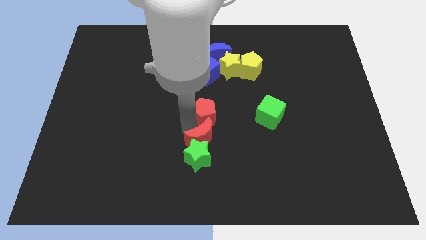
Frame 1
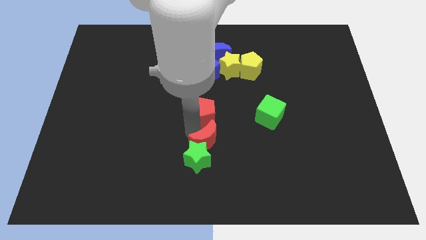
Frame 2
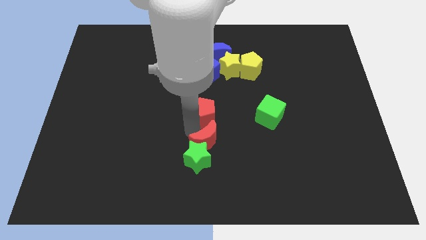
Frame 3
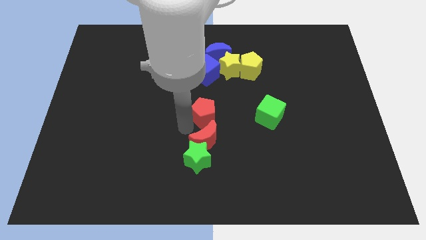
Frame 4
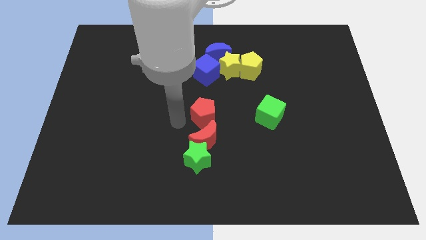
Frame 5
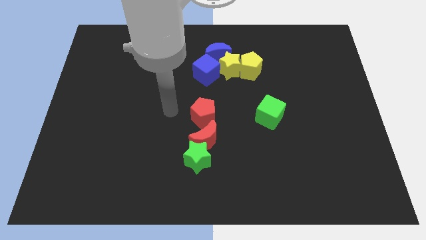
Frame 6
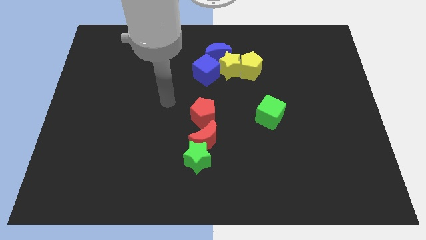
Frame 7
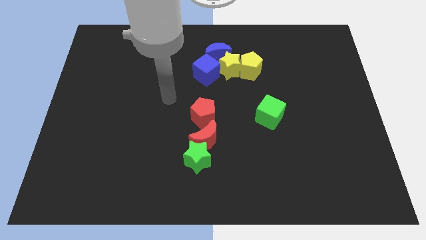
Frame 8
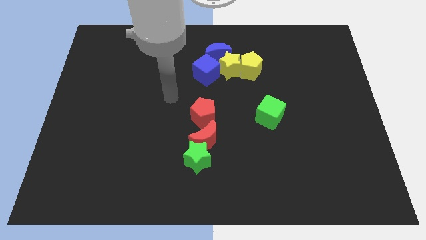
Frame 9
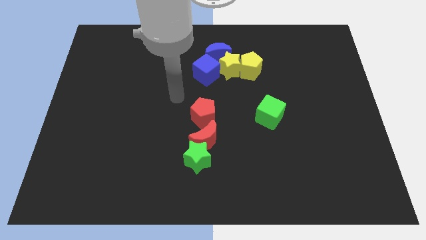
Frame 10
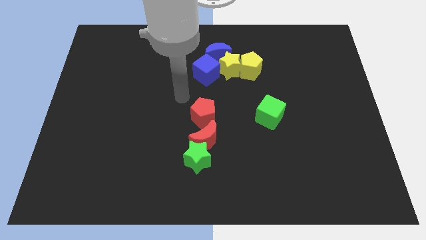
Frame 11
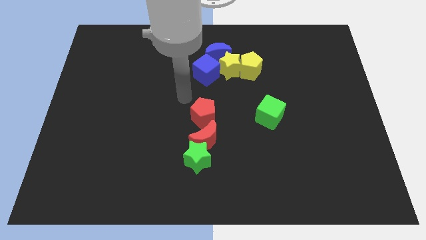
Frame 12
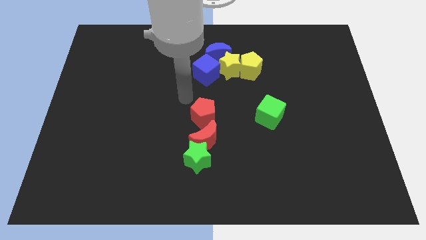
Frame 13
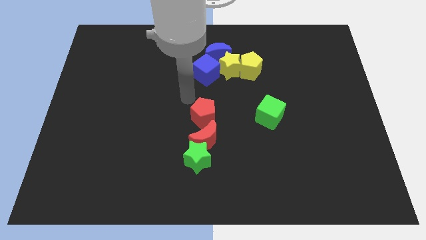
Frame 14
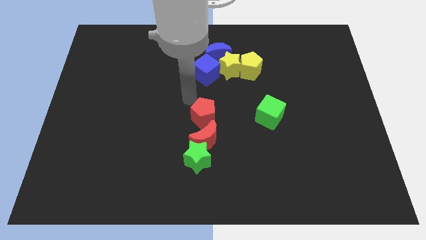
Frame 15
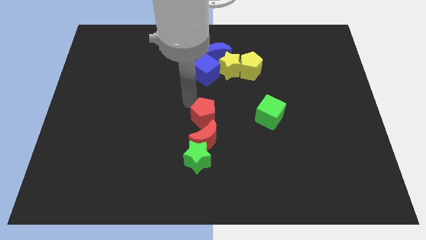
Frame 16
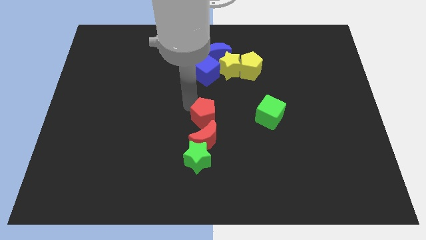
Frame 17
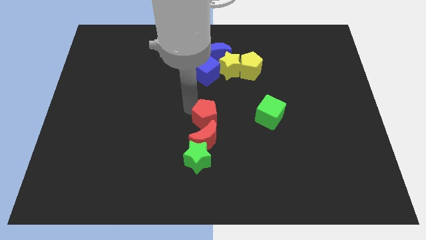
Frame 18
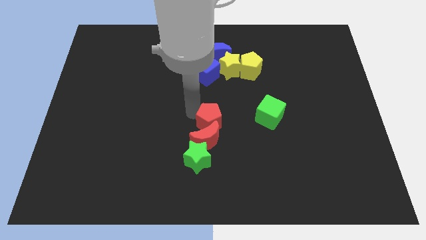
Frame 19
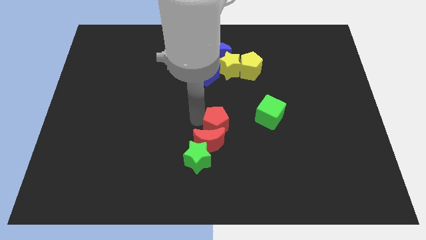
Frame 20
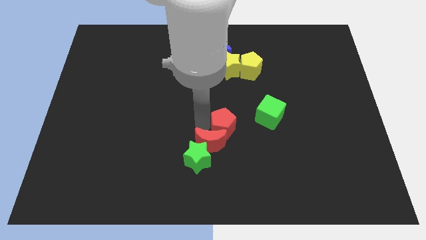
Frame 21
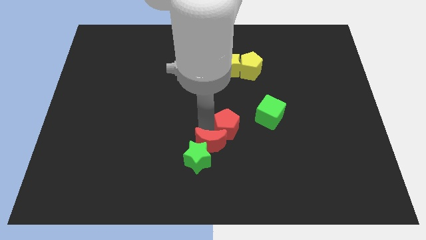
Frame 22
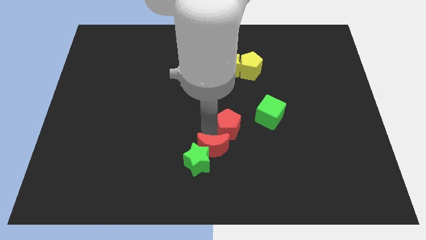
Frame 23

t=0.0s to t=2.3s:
push the red moon into the green star on the top

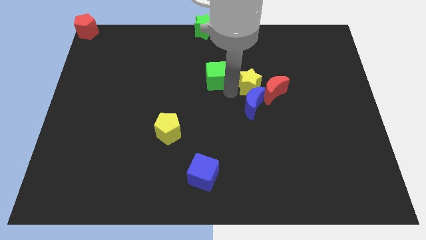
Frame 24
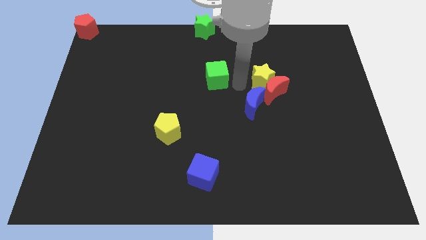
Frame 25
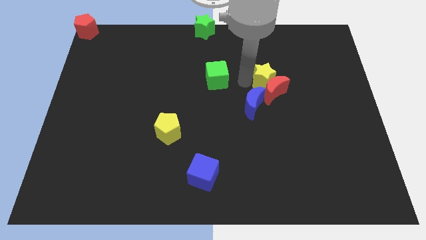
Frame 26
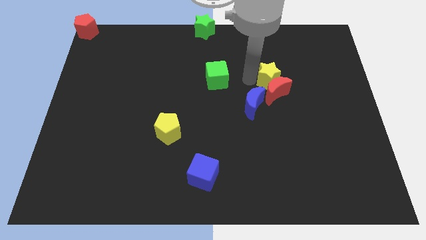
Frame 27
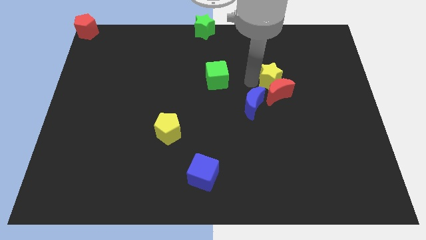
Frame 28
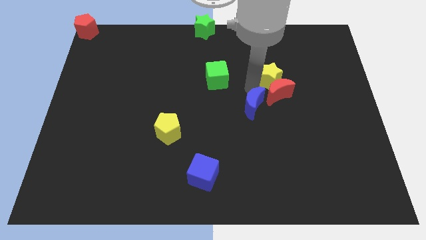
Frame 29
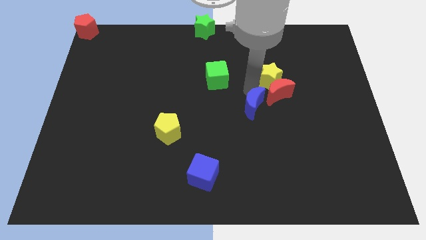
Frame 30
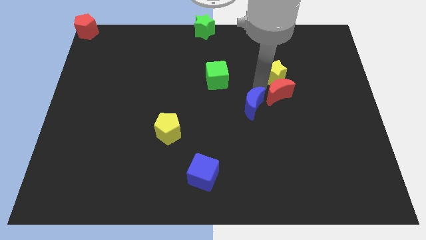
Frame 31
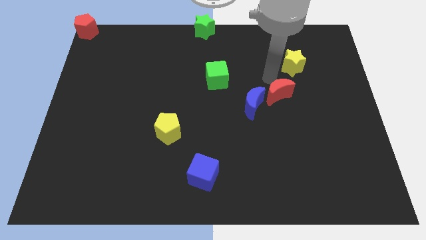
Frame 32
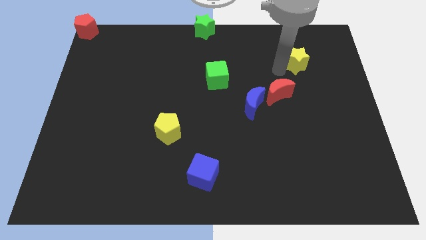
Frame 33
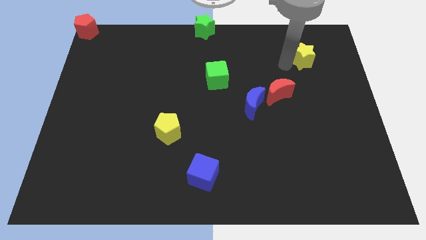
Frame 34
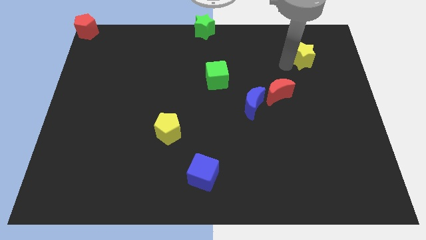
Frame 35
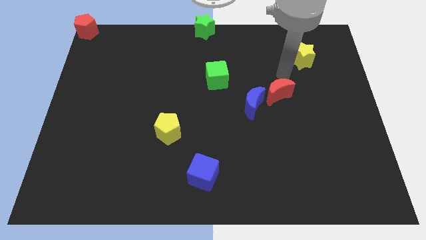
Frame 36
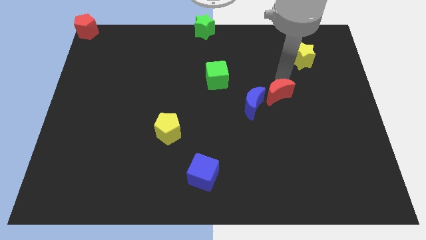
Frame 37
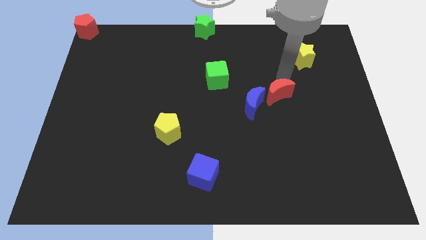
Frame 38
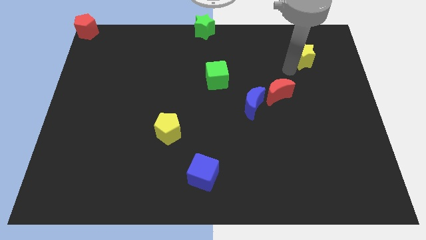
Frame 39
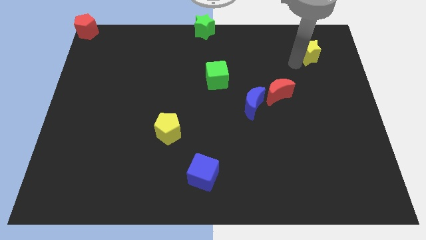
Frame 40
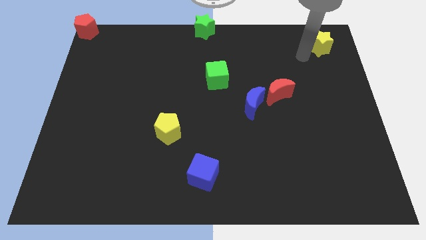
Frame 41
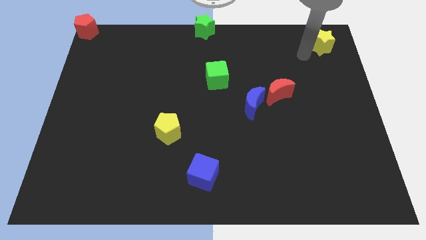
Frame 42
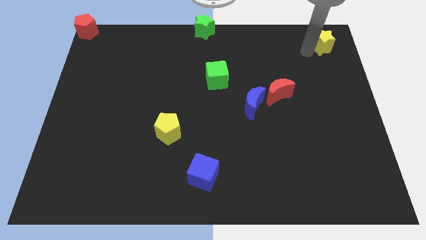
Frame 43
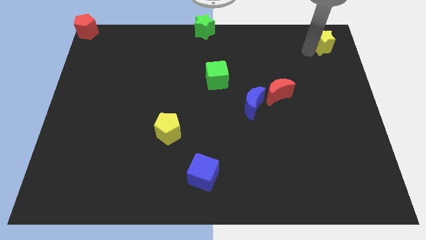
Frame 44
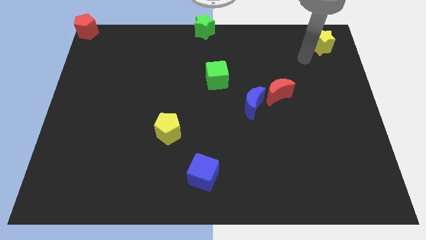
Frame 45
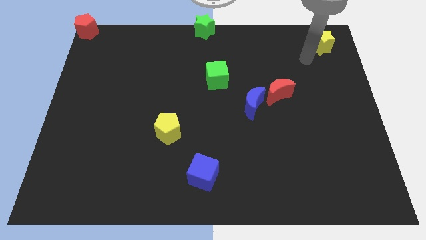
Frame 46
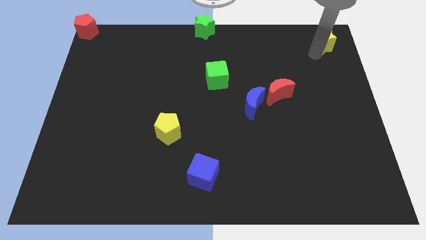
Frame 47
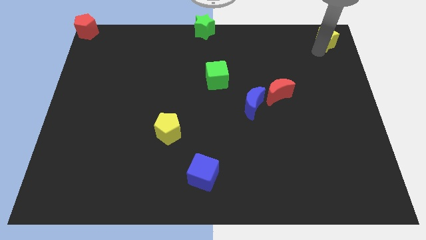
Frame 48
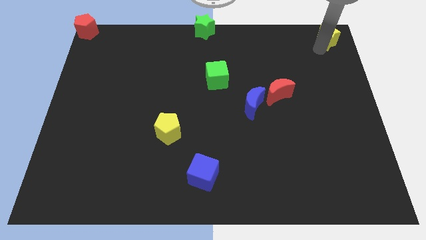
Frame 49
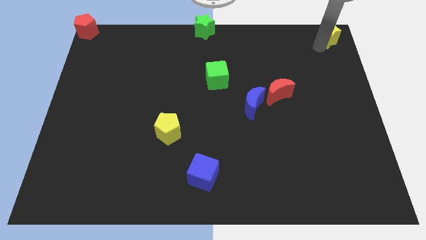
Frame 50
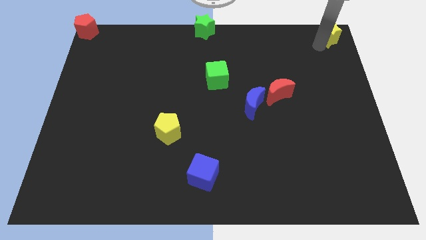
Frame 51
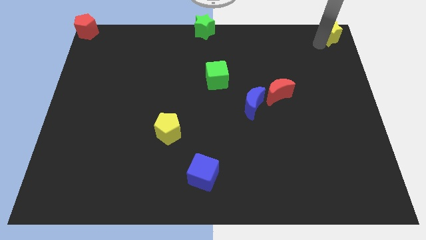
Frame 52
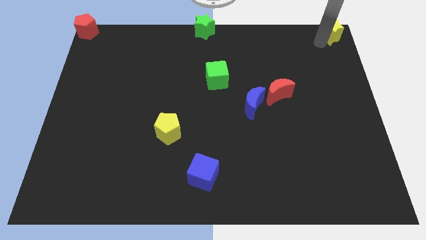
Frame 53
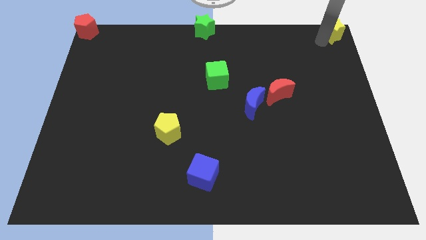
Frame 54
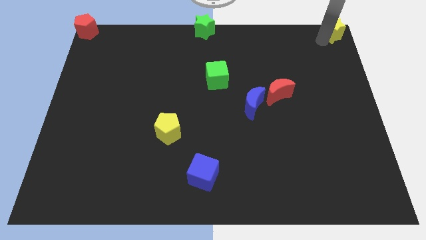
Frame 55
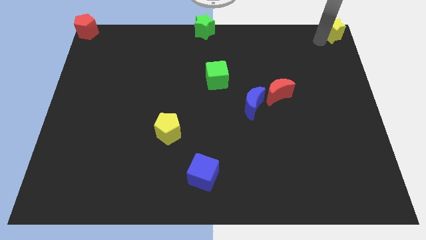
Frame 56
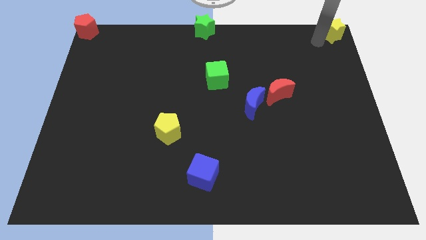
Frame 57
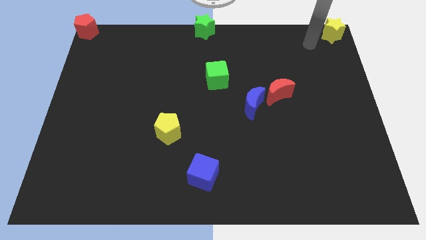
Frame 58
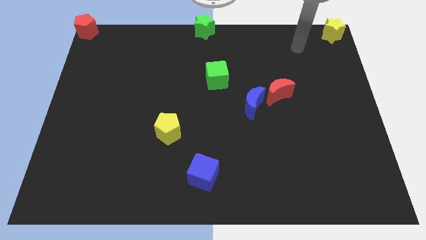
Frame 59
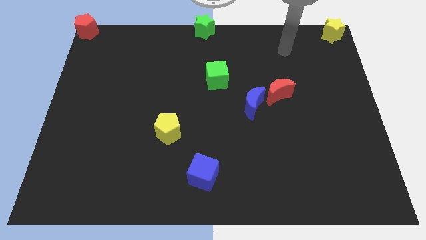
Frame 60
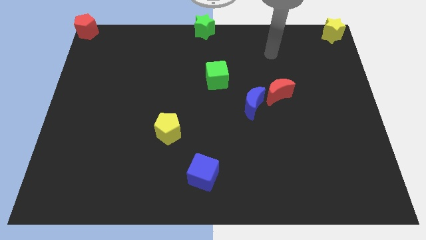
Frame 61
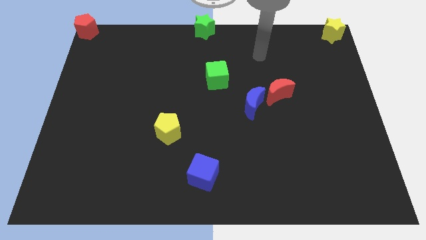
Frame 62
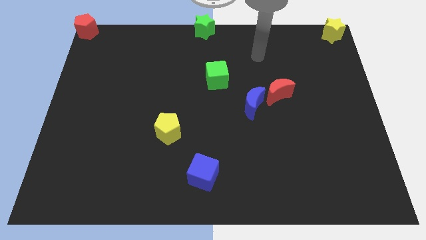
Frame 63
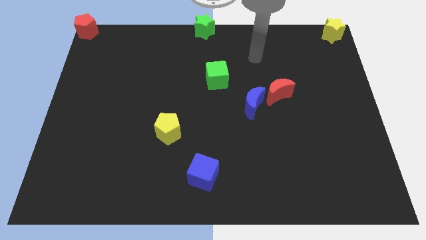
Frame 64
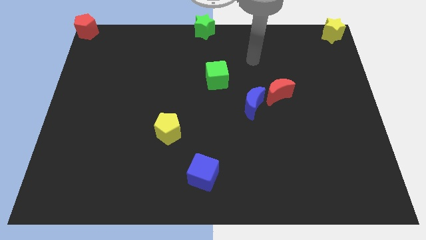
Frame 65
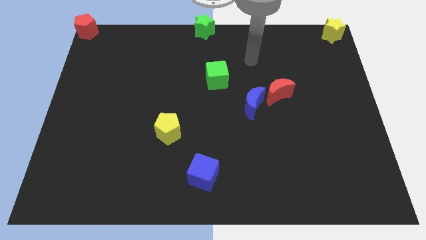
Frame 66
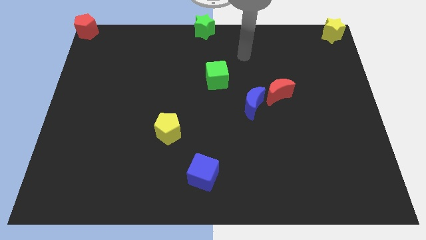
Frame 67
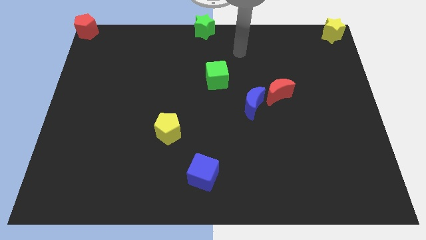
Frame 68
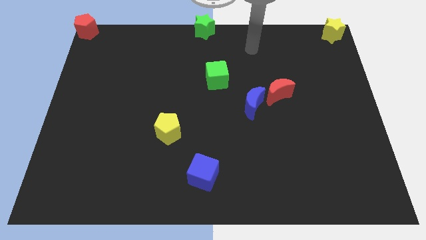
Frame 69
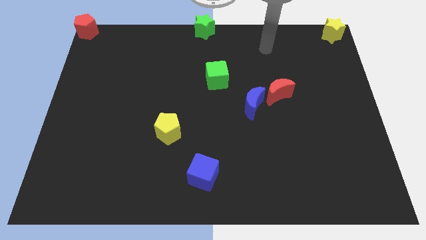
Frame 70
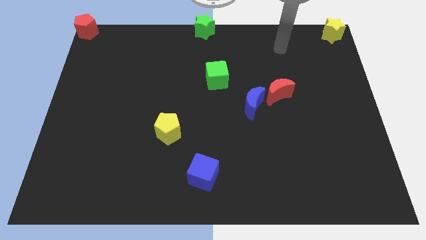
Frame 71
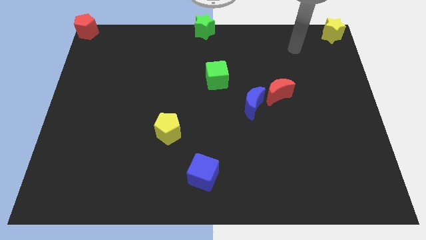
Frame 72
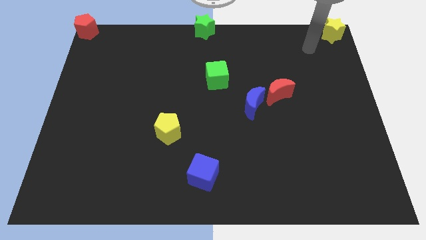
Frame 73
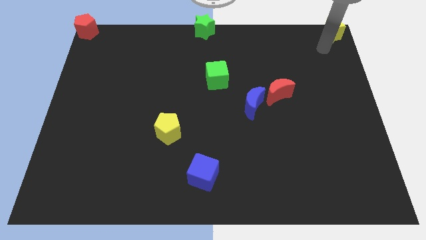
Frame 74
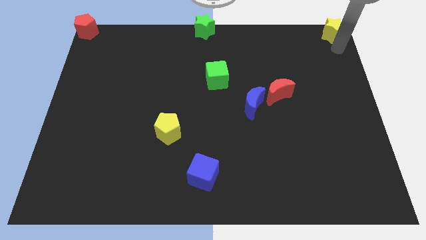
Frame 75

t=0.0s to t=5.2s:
place yellow star towards top right corner

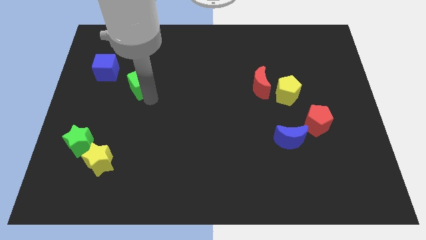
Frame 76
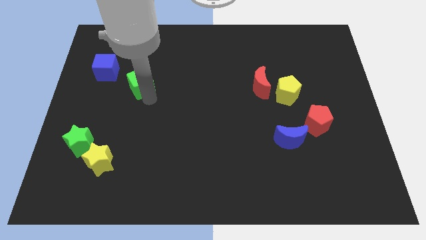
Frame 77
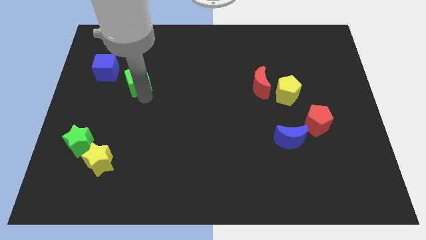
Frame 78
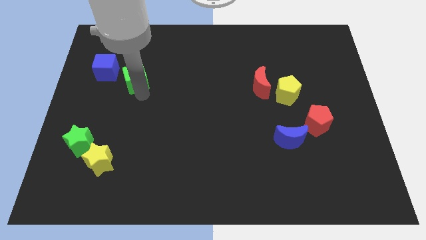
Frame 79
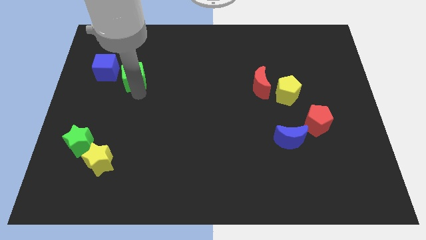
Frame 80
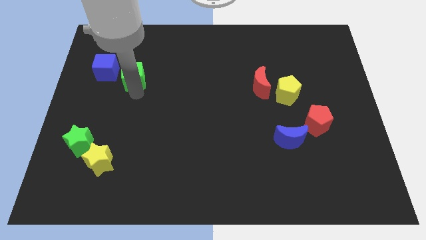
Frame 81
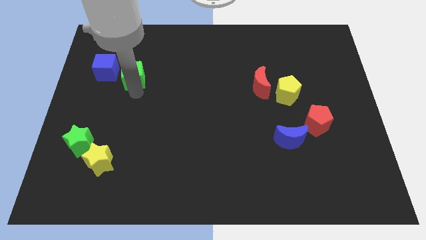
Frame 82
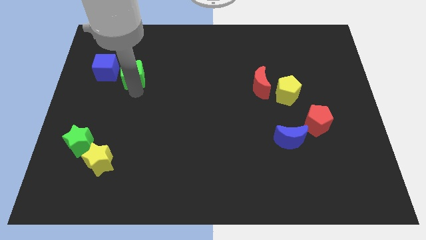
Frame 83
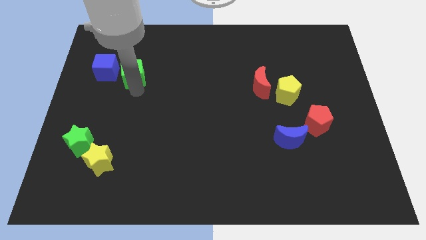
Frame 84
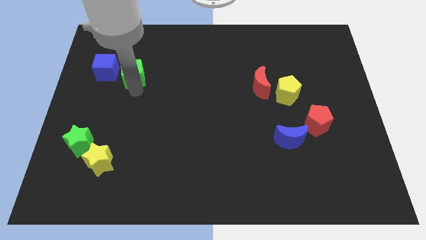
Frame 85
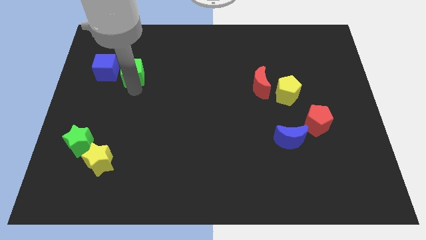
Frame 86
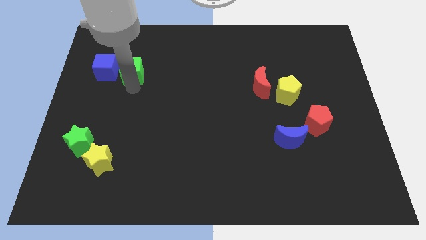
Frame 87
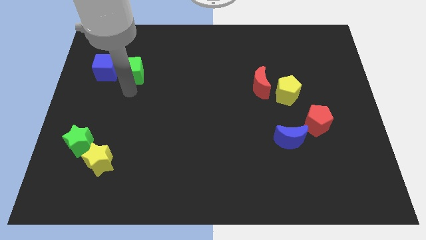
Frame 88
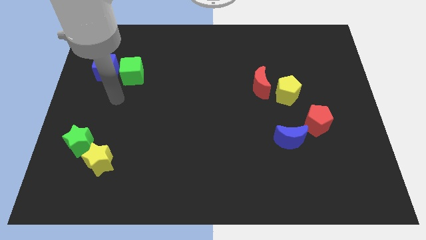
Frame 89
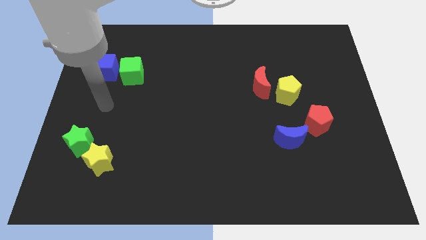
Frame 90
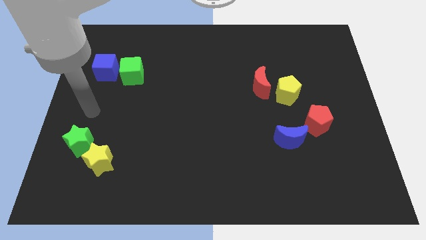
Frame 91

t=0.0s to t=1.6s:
place the green cube to the right side of the blue cube

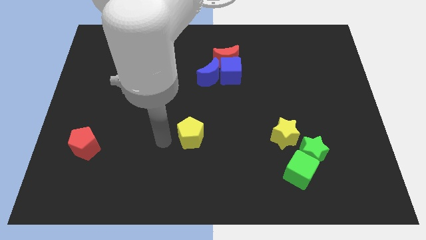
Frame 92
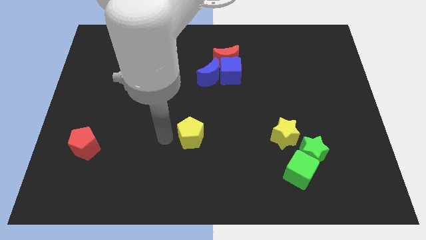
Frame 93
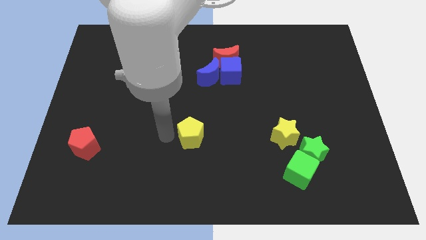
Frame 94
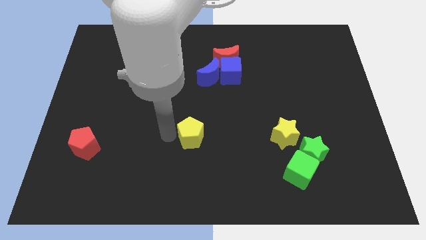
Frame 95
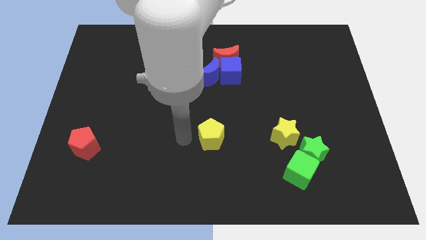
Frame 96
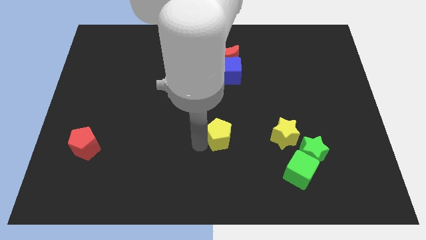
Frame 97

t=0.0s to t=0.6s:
place the yellow pentagon below the group of blue blocks
